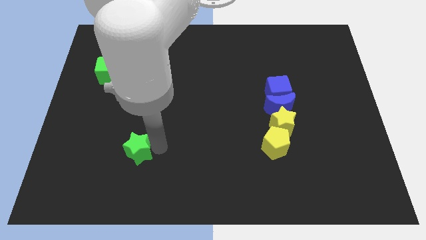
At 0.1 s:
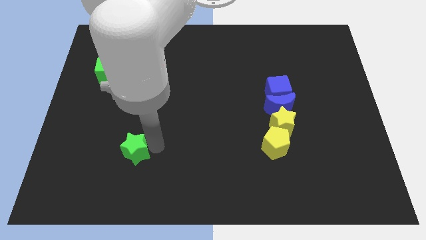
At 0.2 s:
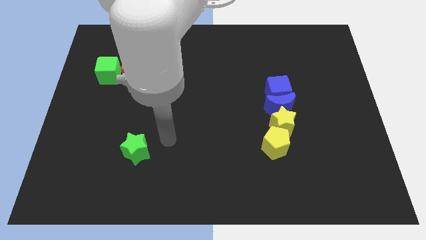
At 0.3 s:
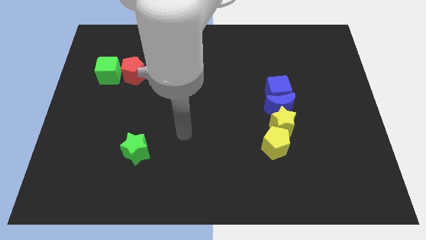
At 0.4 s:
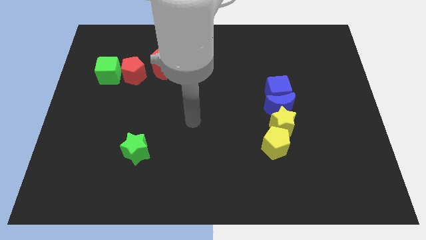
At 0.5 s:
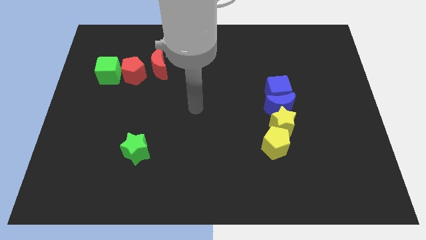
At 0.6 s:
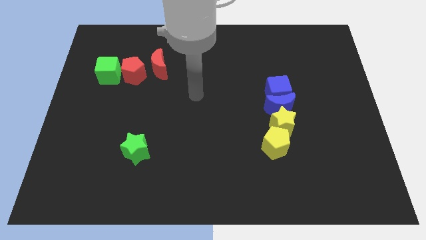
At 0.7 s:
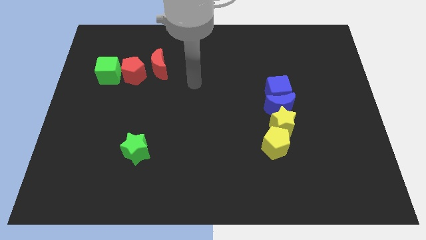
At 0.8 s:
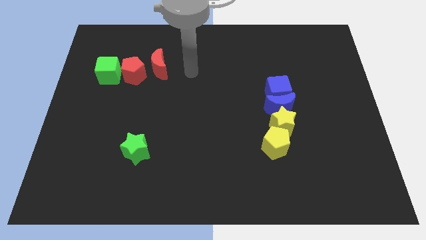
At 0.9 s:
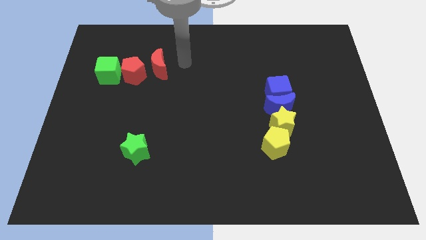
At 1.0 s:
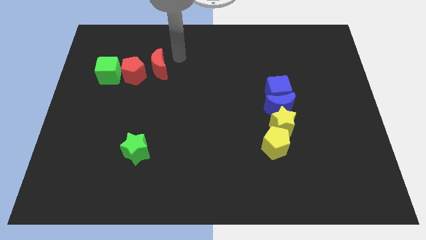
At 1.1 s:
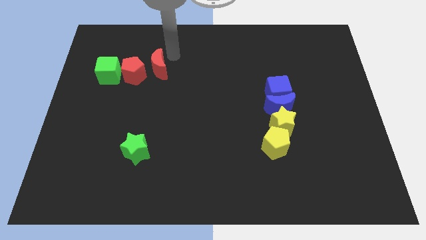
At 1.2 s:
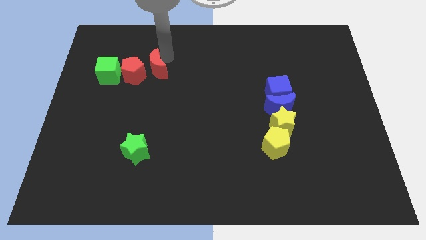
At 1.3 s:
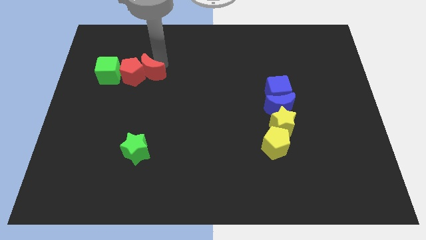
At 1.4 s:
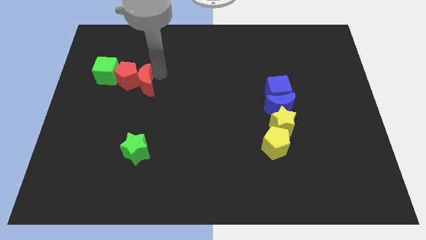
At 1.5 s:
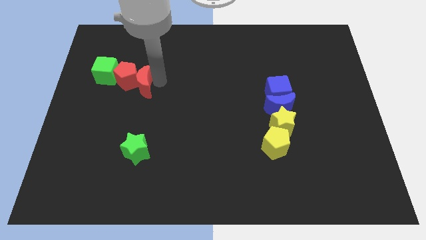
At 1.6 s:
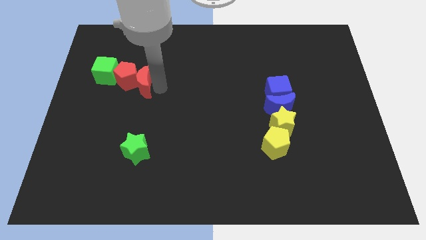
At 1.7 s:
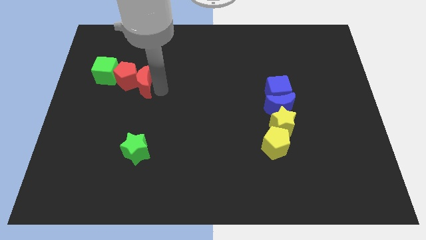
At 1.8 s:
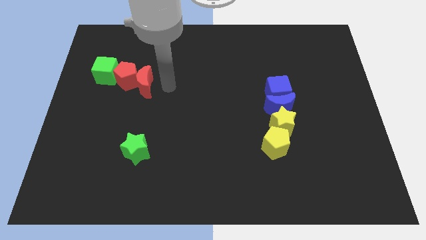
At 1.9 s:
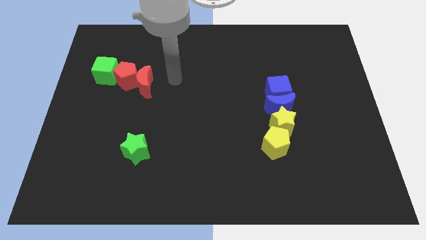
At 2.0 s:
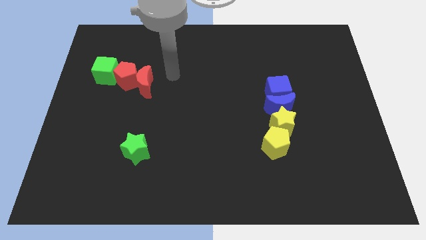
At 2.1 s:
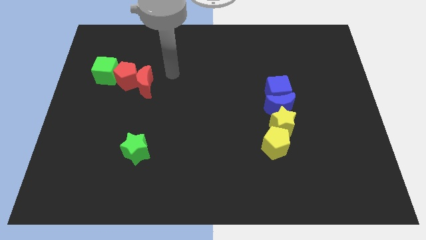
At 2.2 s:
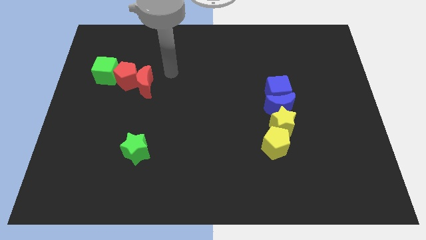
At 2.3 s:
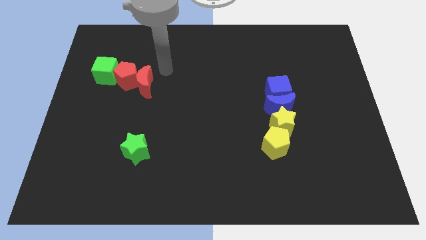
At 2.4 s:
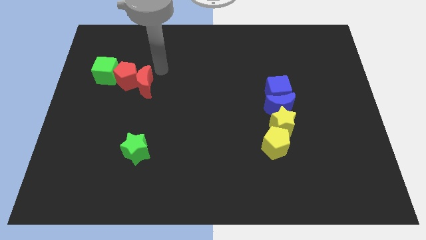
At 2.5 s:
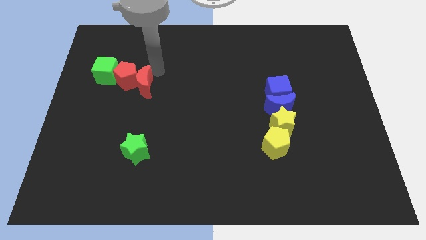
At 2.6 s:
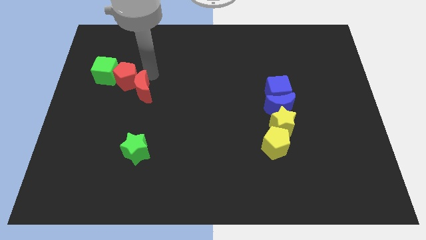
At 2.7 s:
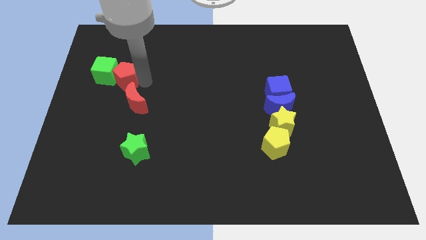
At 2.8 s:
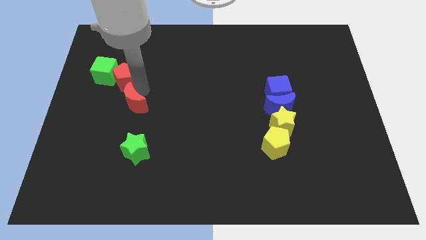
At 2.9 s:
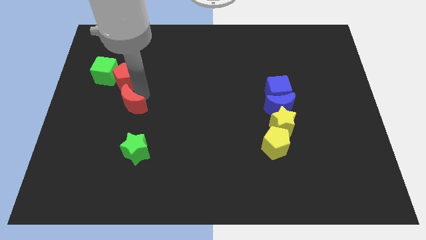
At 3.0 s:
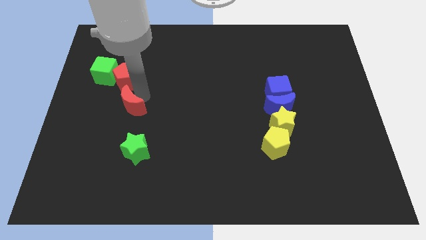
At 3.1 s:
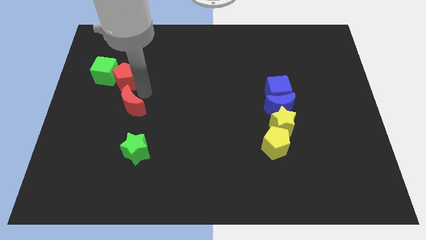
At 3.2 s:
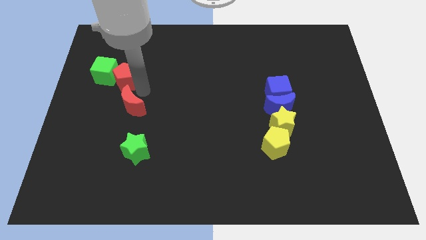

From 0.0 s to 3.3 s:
move the red moon to the top side of the green star
